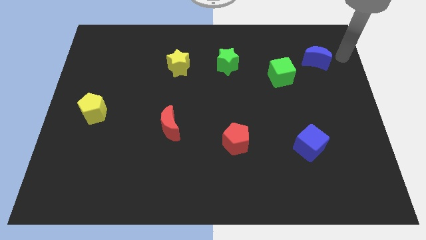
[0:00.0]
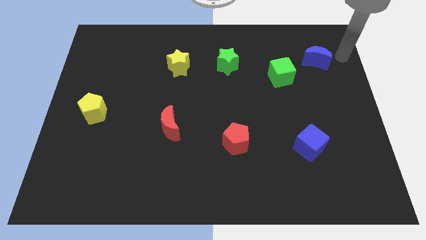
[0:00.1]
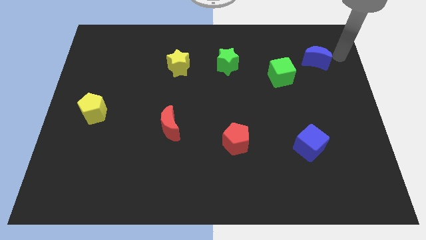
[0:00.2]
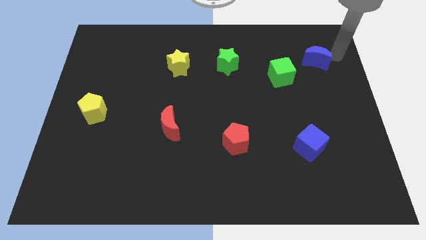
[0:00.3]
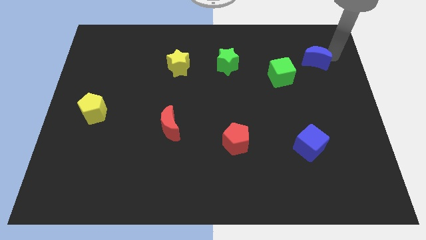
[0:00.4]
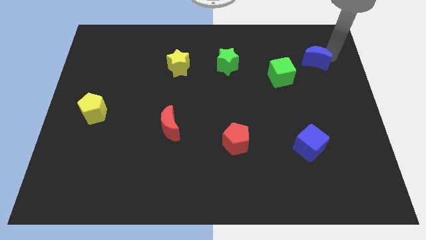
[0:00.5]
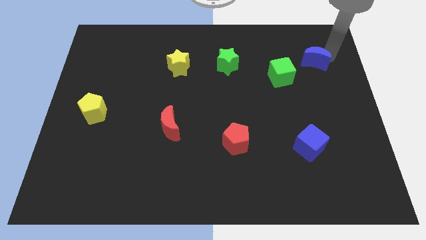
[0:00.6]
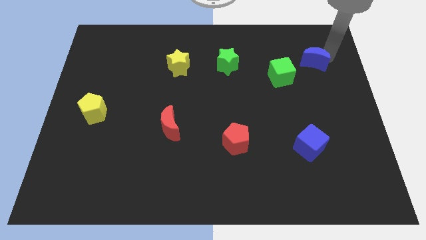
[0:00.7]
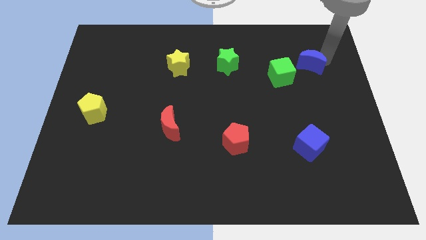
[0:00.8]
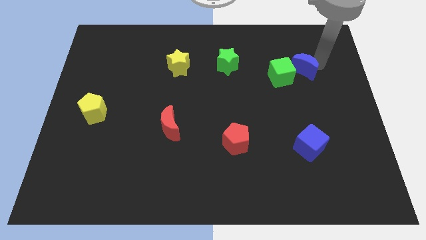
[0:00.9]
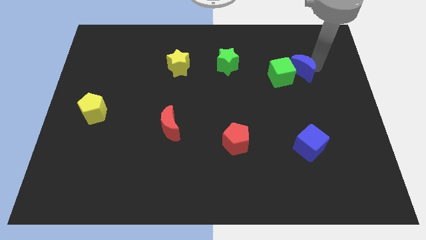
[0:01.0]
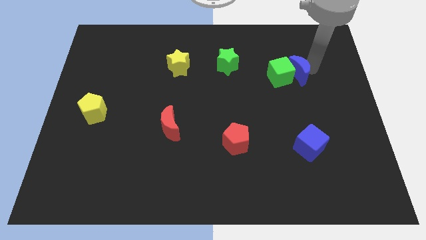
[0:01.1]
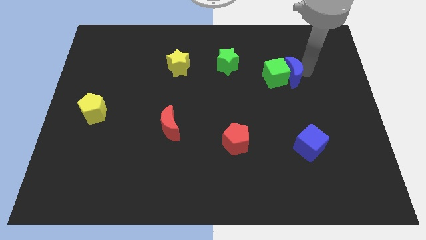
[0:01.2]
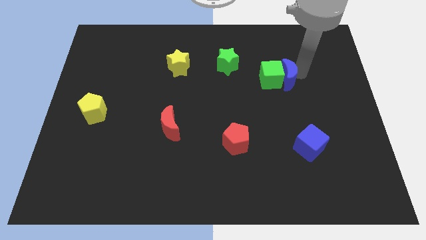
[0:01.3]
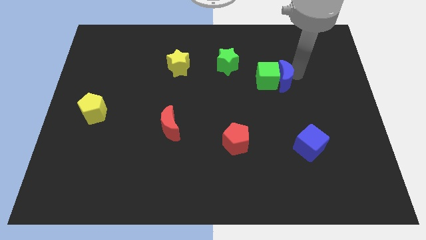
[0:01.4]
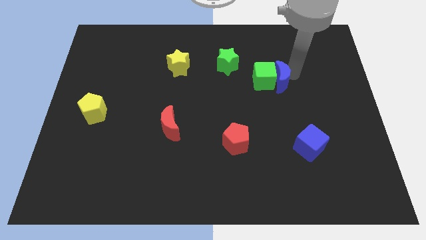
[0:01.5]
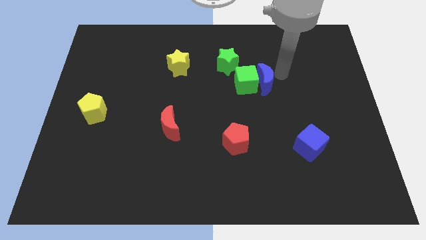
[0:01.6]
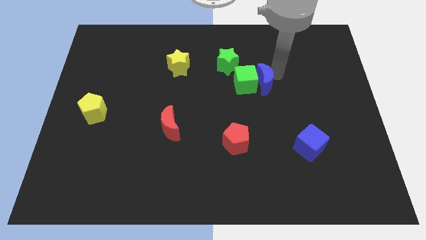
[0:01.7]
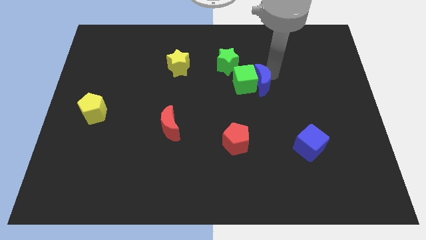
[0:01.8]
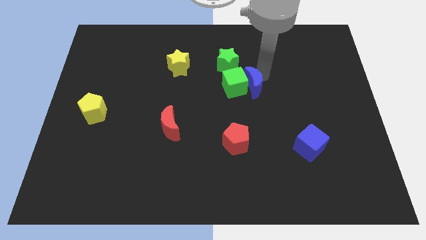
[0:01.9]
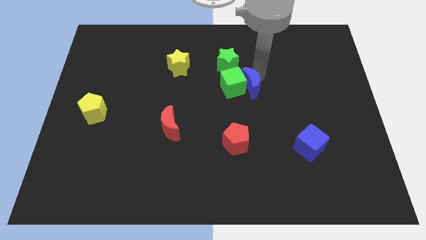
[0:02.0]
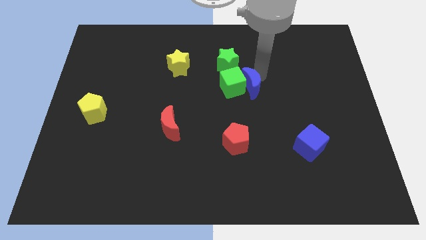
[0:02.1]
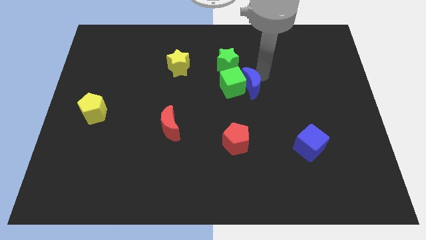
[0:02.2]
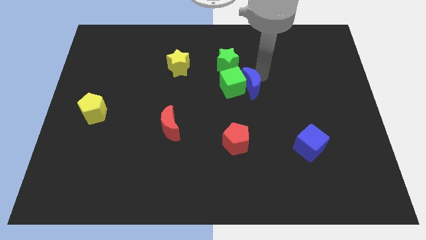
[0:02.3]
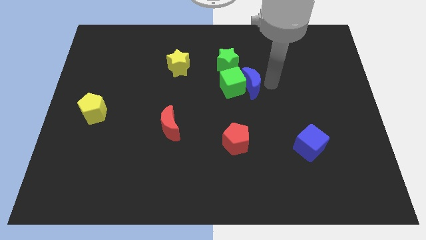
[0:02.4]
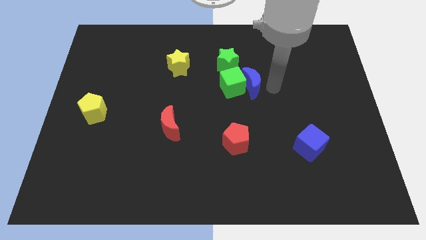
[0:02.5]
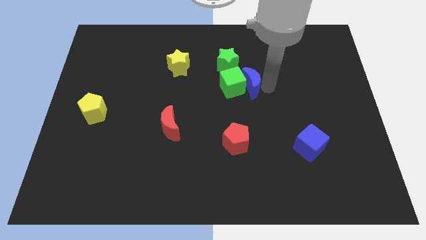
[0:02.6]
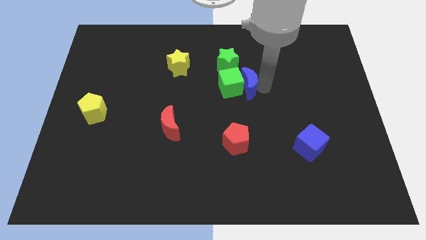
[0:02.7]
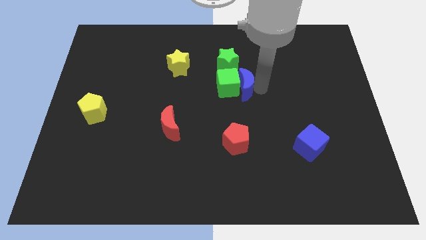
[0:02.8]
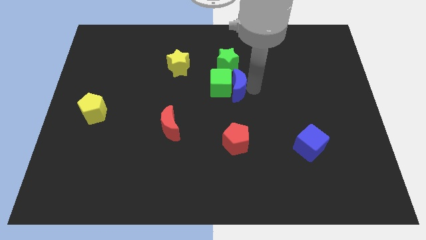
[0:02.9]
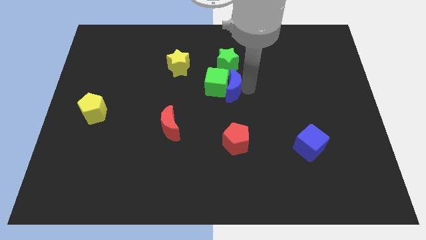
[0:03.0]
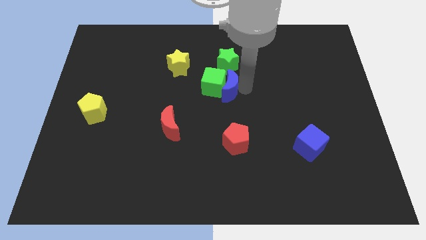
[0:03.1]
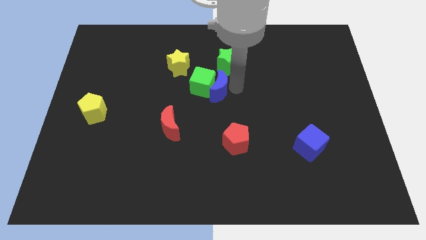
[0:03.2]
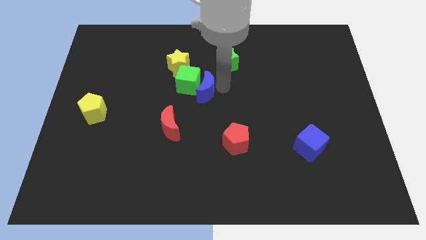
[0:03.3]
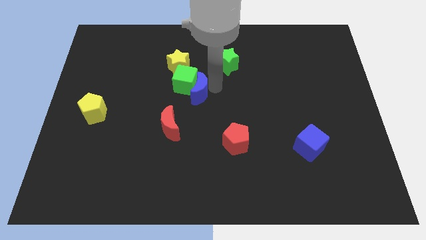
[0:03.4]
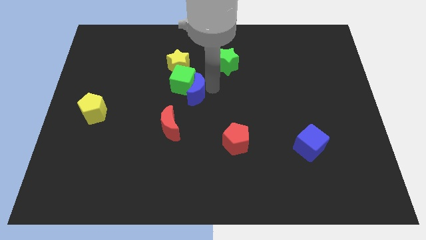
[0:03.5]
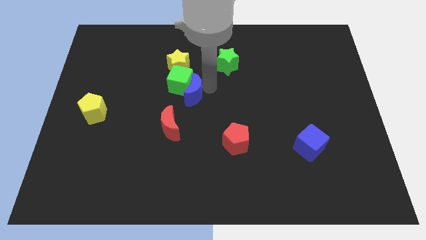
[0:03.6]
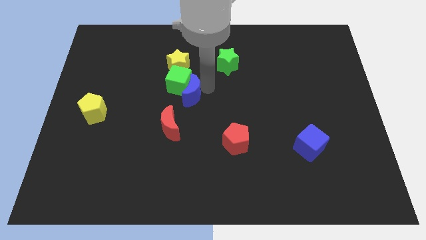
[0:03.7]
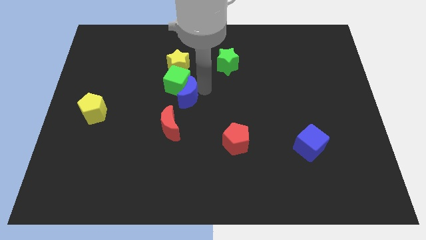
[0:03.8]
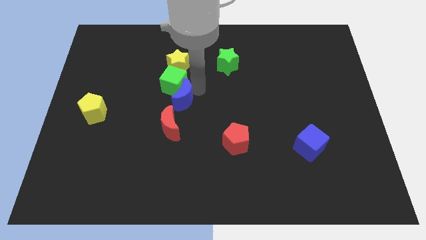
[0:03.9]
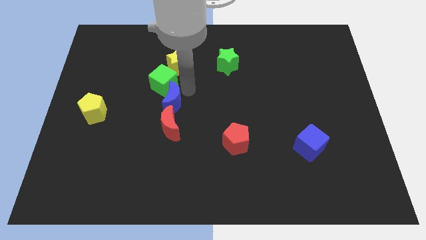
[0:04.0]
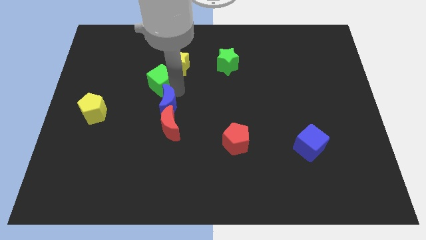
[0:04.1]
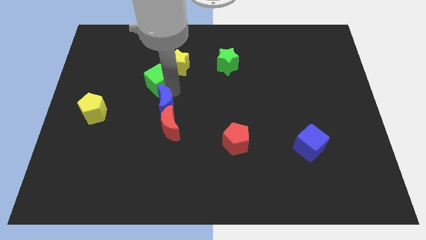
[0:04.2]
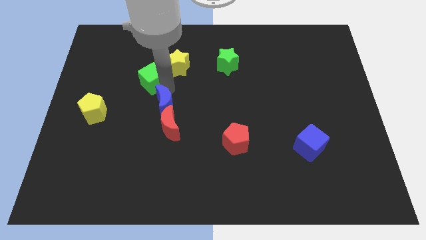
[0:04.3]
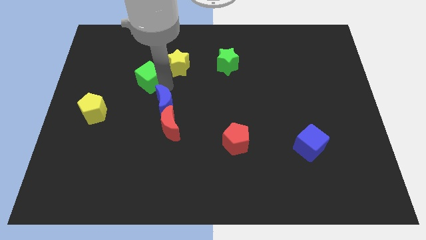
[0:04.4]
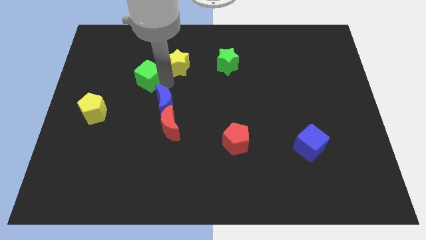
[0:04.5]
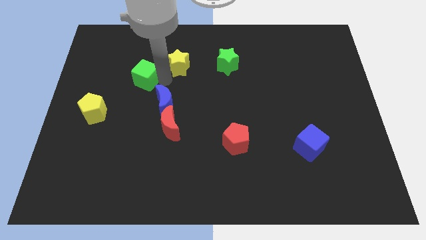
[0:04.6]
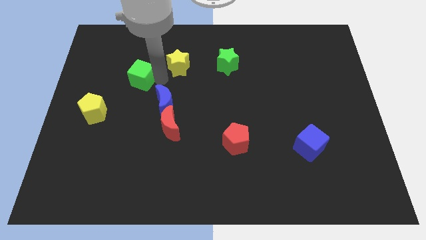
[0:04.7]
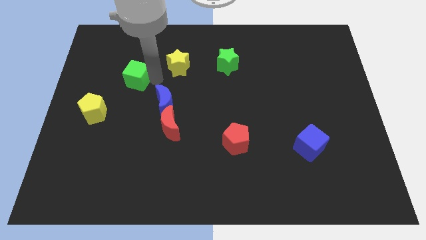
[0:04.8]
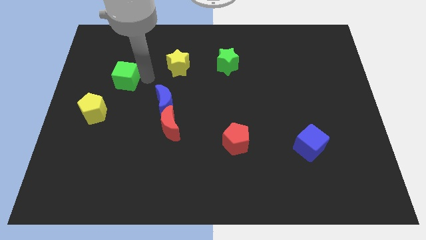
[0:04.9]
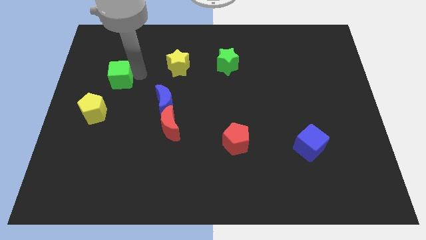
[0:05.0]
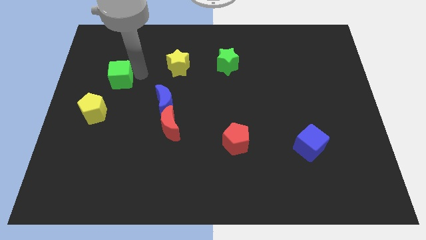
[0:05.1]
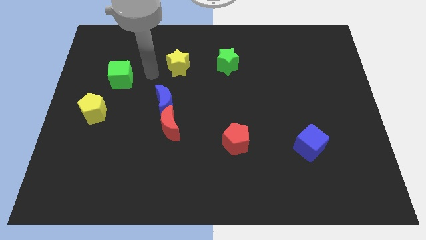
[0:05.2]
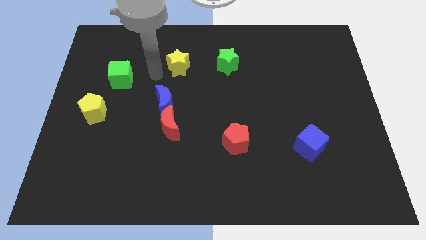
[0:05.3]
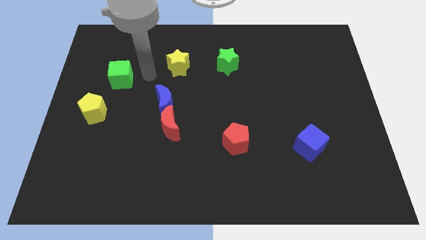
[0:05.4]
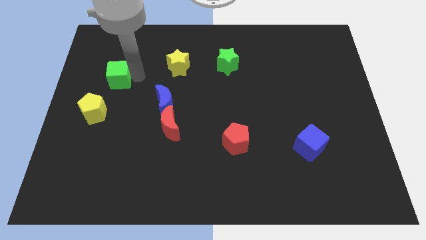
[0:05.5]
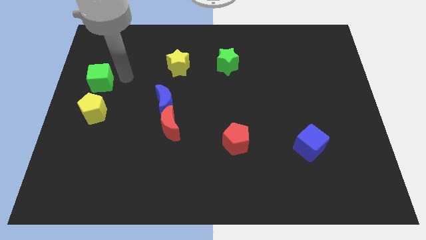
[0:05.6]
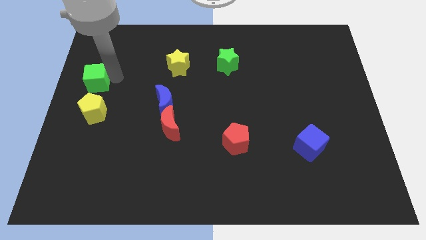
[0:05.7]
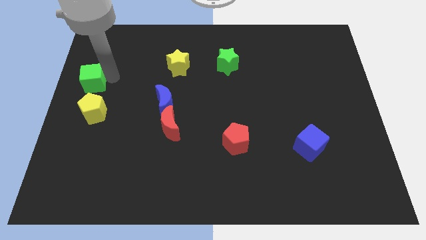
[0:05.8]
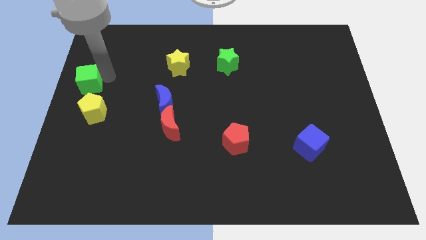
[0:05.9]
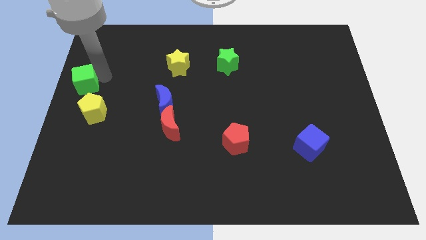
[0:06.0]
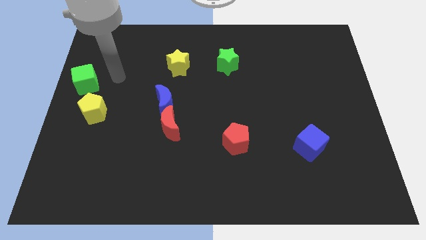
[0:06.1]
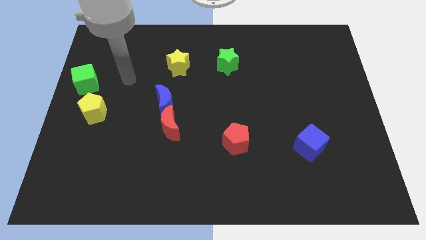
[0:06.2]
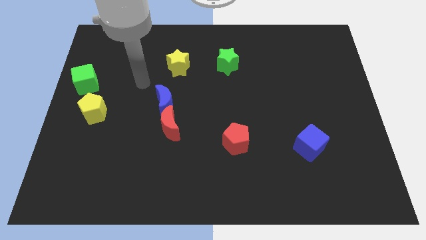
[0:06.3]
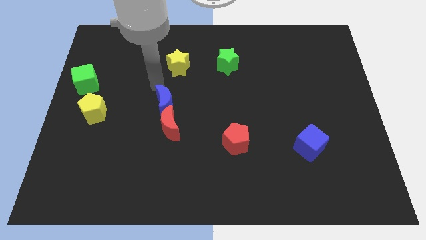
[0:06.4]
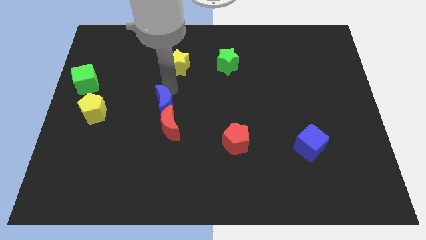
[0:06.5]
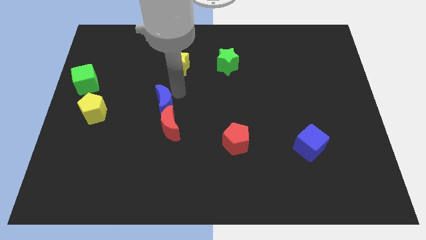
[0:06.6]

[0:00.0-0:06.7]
drag the blue moon vertically above the red crescent

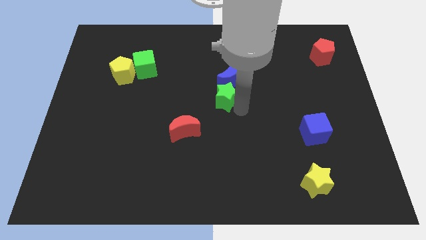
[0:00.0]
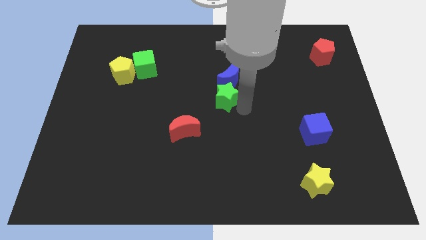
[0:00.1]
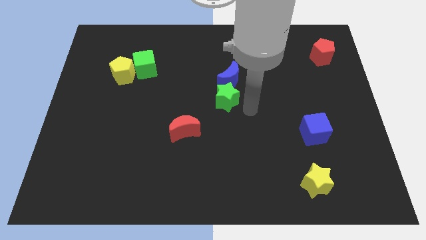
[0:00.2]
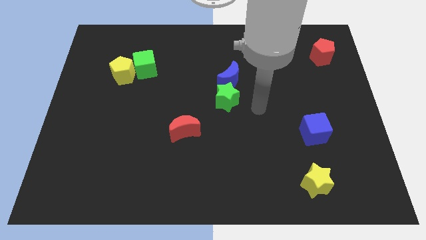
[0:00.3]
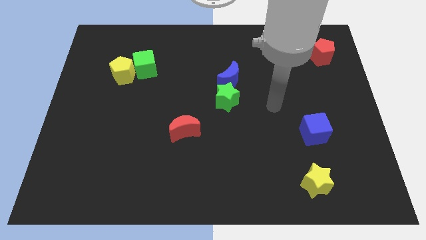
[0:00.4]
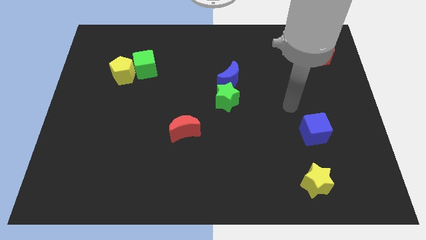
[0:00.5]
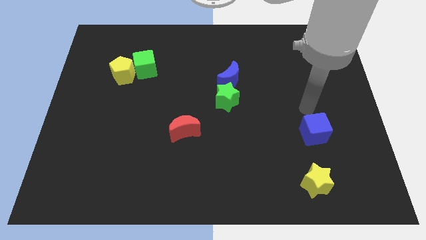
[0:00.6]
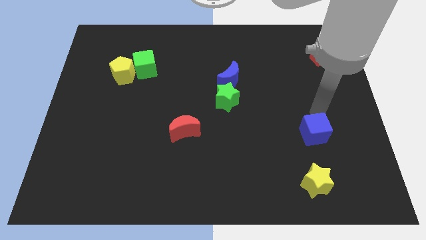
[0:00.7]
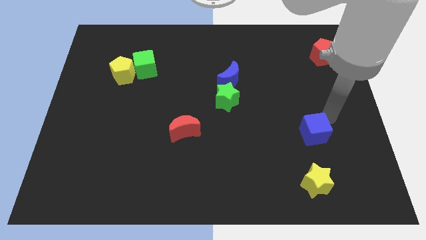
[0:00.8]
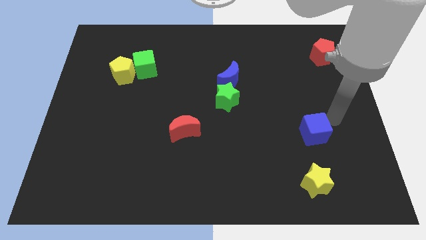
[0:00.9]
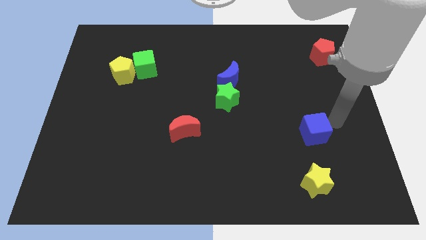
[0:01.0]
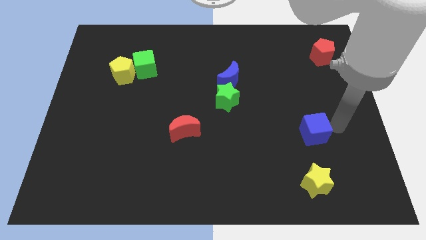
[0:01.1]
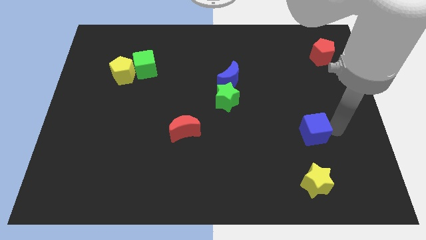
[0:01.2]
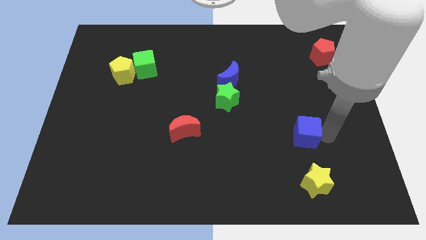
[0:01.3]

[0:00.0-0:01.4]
touch the right side of the blue cube

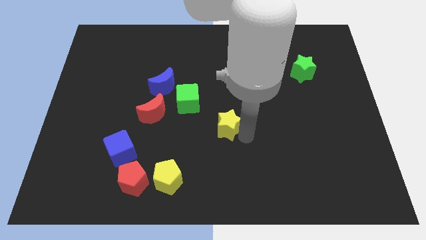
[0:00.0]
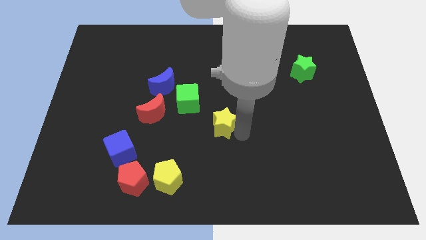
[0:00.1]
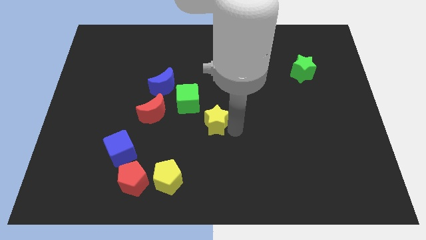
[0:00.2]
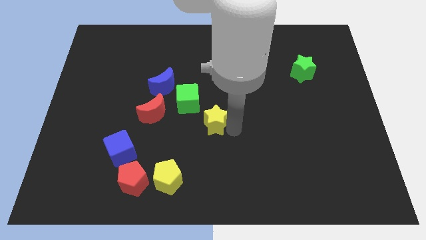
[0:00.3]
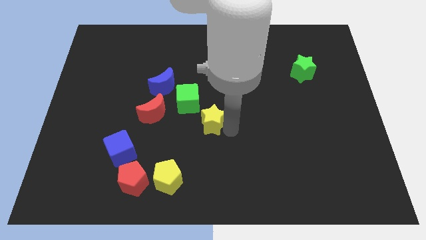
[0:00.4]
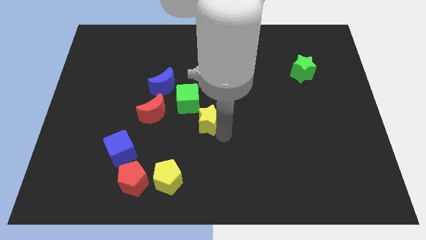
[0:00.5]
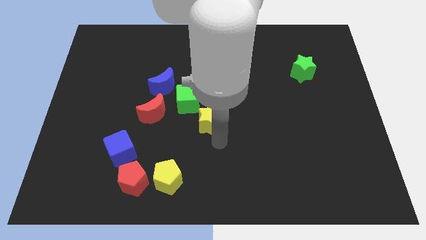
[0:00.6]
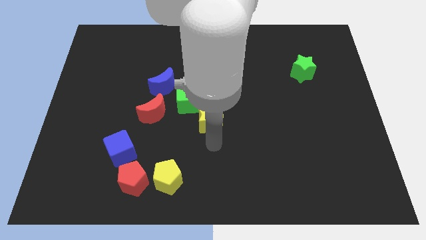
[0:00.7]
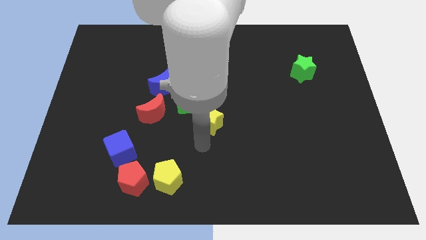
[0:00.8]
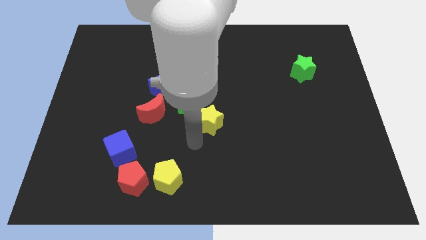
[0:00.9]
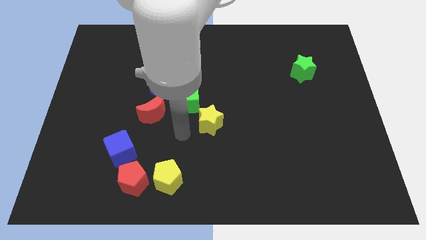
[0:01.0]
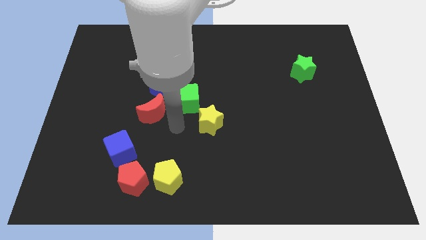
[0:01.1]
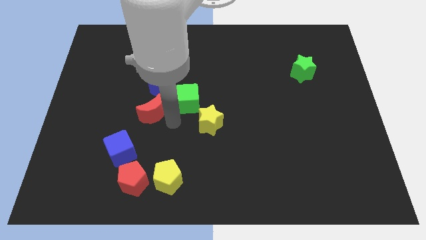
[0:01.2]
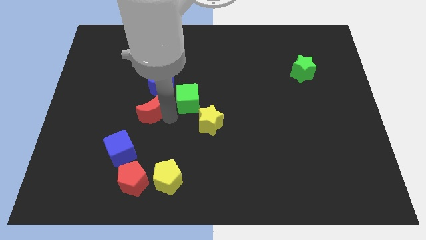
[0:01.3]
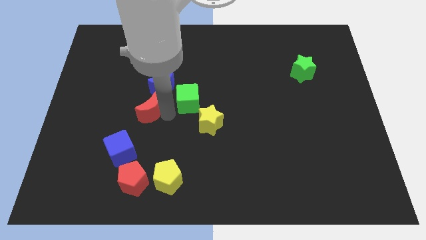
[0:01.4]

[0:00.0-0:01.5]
push yellow star towards the green cube
